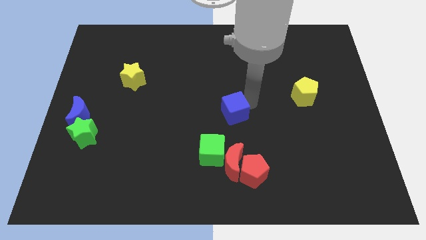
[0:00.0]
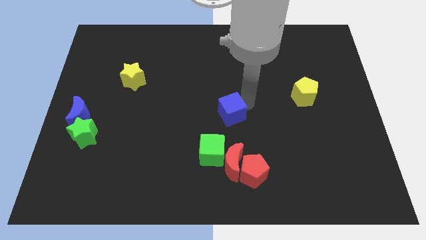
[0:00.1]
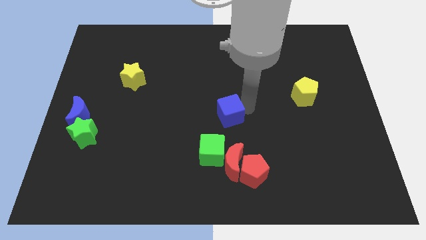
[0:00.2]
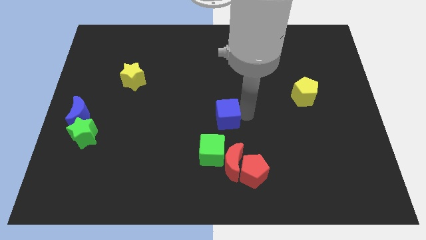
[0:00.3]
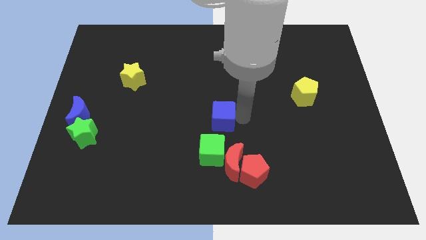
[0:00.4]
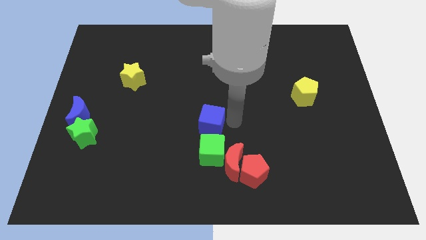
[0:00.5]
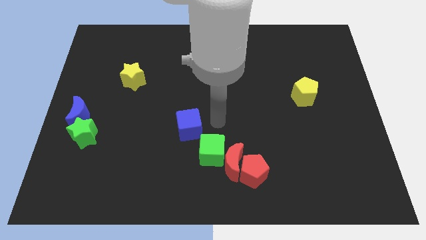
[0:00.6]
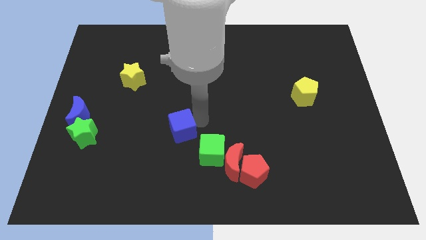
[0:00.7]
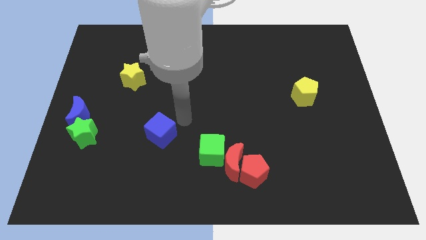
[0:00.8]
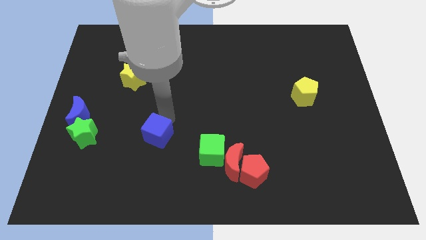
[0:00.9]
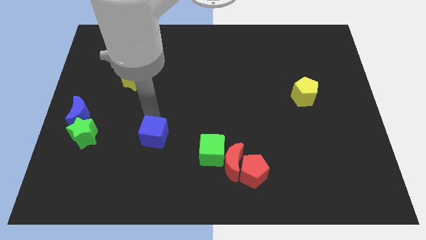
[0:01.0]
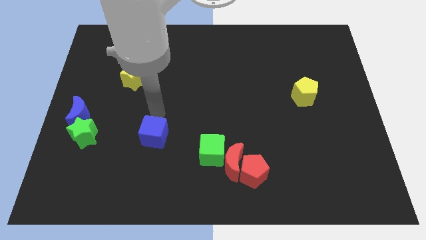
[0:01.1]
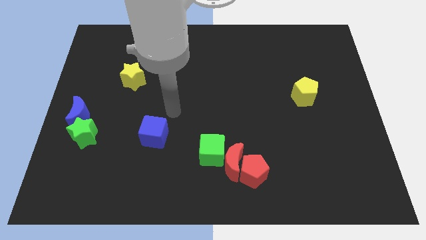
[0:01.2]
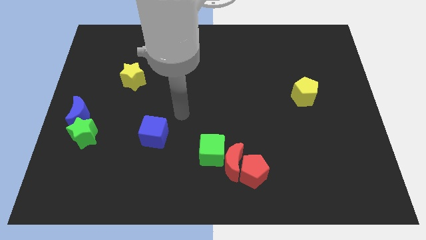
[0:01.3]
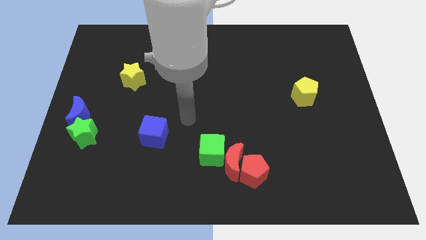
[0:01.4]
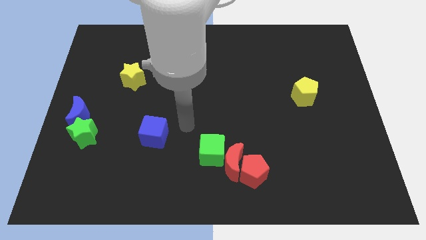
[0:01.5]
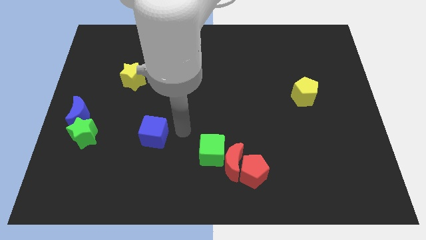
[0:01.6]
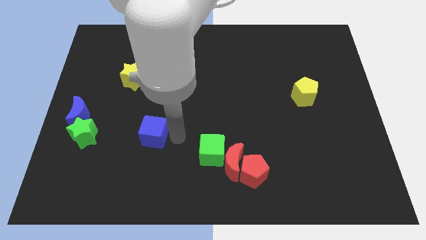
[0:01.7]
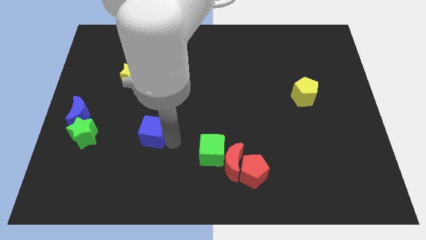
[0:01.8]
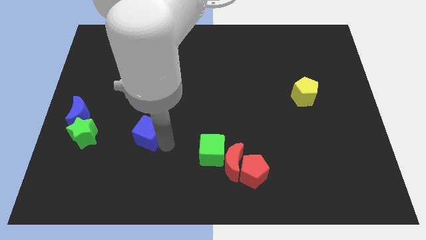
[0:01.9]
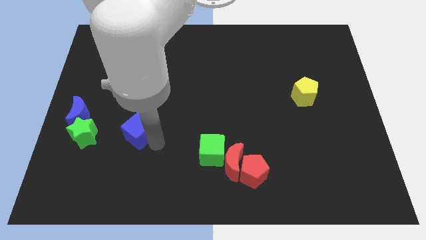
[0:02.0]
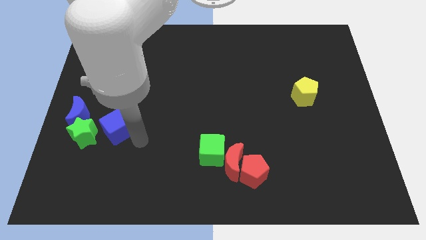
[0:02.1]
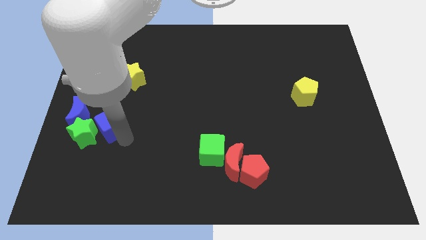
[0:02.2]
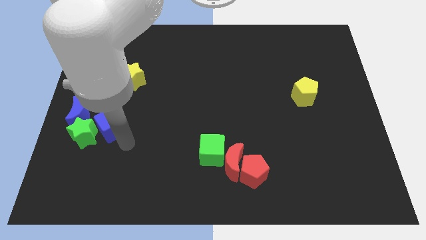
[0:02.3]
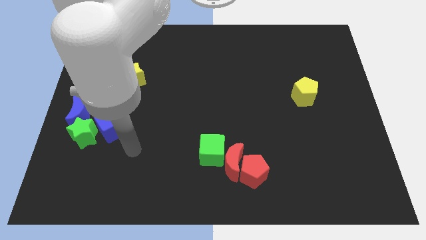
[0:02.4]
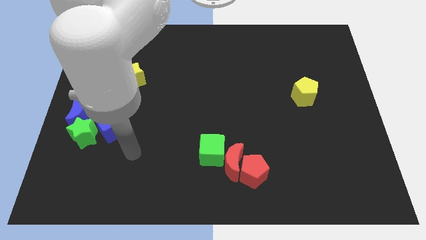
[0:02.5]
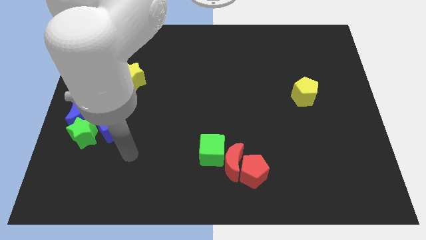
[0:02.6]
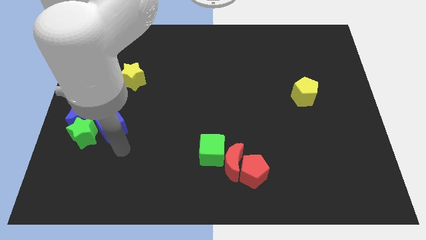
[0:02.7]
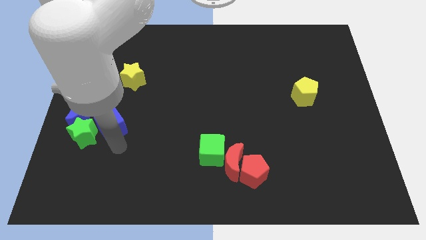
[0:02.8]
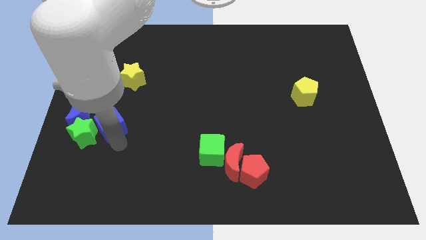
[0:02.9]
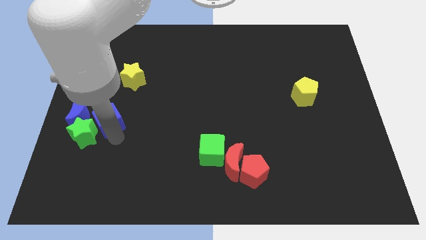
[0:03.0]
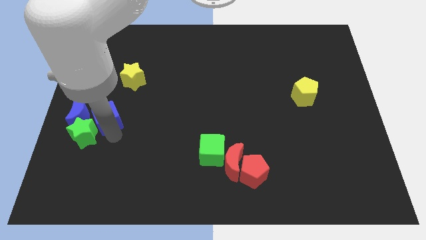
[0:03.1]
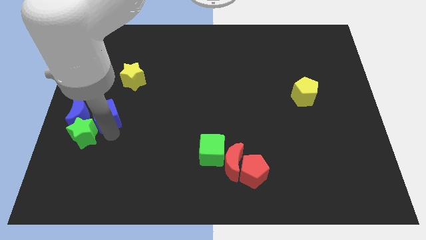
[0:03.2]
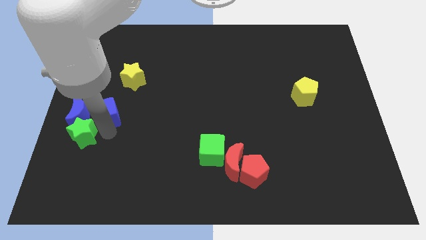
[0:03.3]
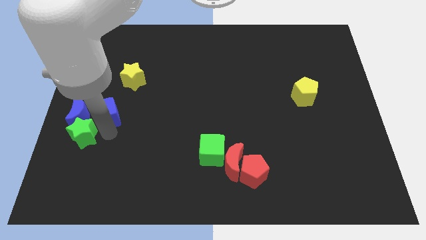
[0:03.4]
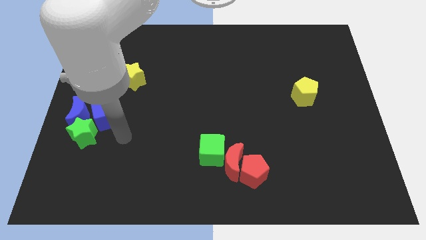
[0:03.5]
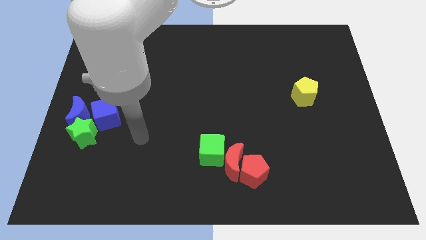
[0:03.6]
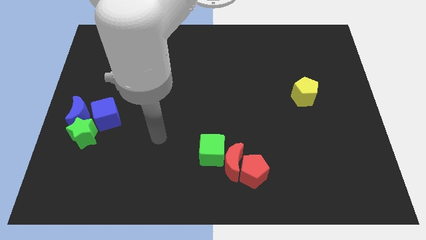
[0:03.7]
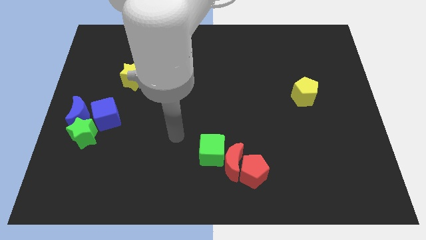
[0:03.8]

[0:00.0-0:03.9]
move the blue cube to the right of the blue moon

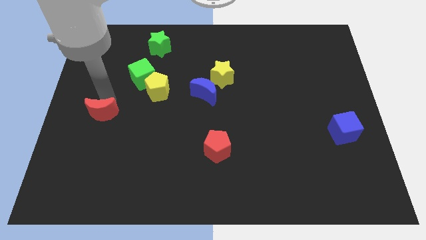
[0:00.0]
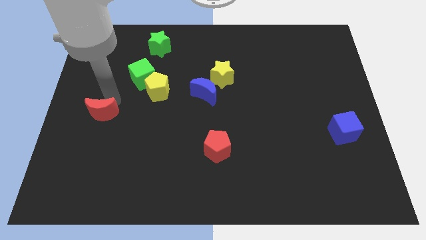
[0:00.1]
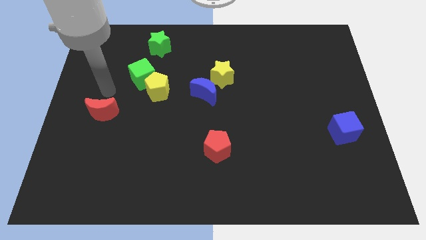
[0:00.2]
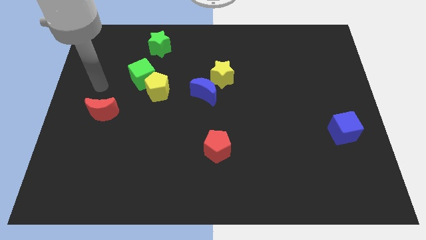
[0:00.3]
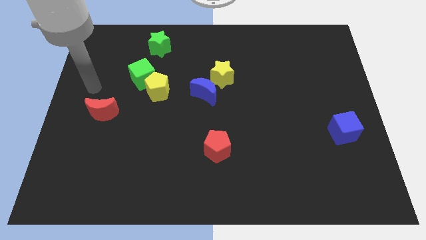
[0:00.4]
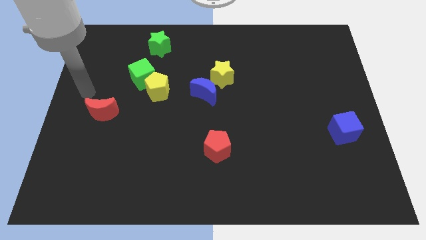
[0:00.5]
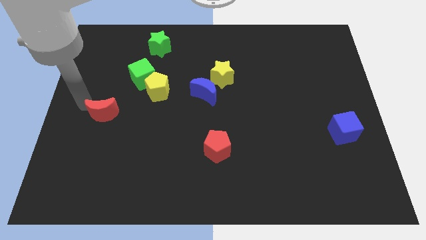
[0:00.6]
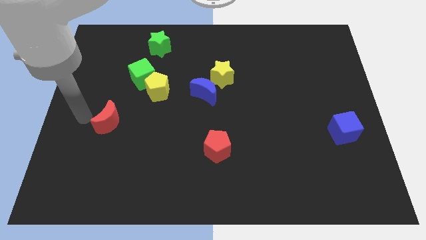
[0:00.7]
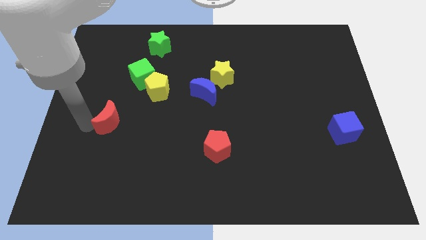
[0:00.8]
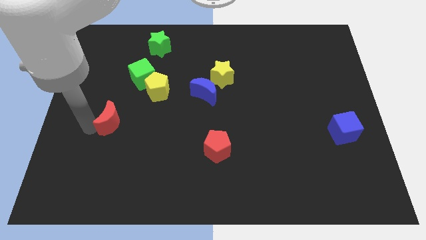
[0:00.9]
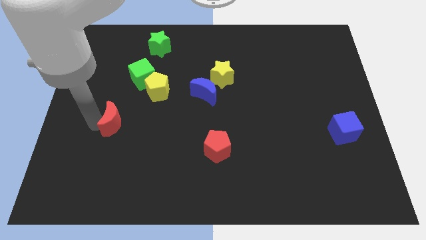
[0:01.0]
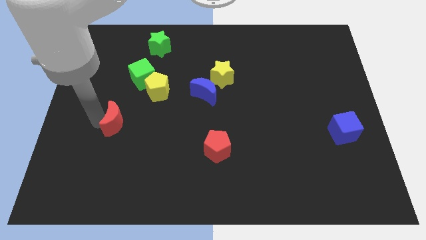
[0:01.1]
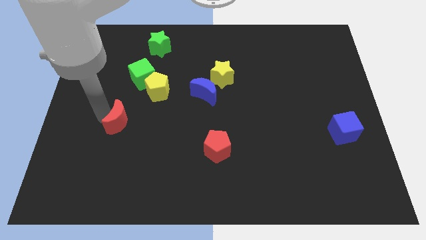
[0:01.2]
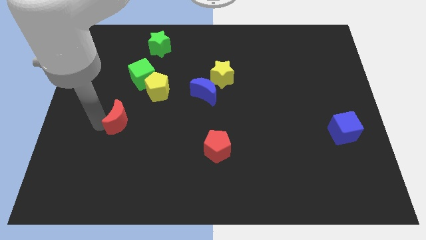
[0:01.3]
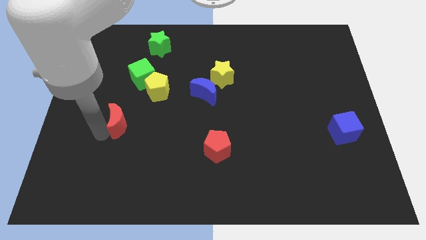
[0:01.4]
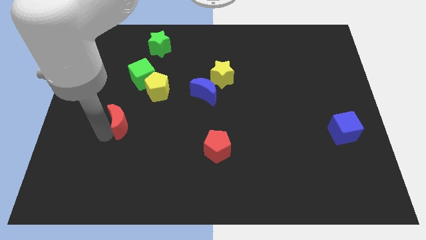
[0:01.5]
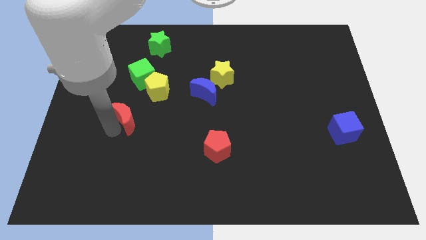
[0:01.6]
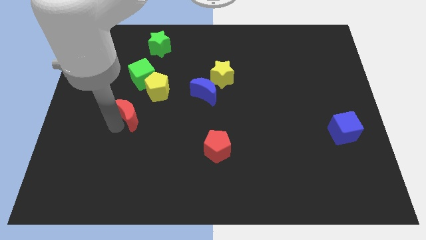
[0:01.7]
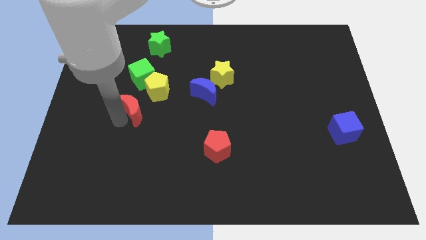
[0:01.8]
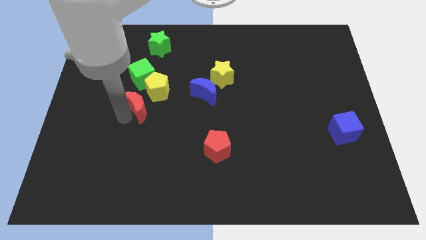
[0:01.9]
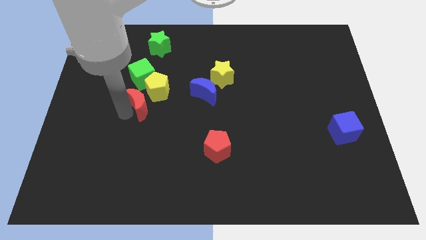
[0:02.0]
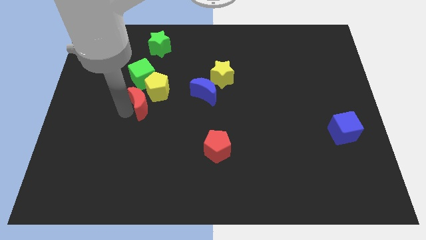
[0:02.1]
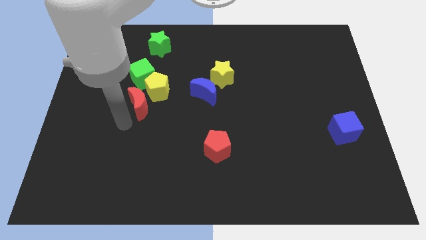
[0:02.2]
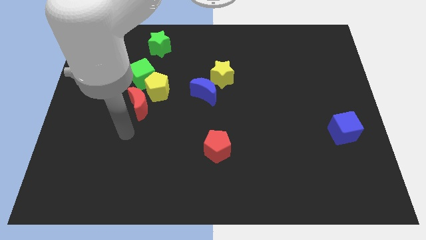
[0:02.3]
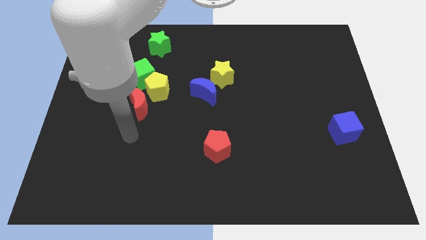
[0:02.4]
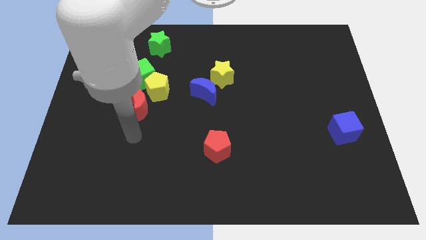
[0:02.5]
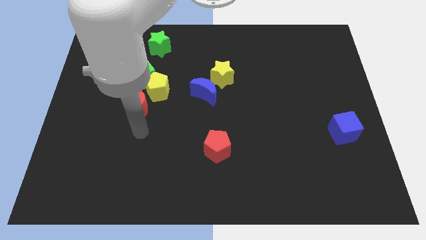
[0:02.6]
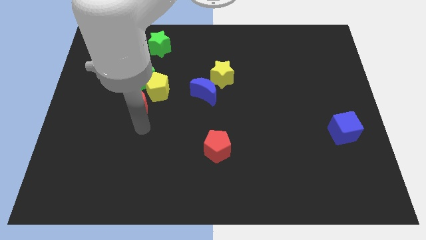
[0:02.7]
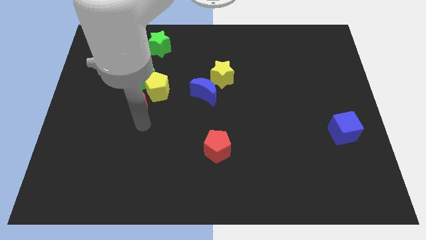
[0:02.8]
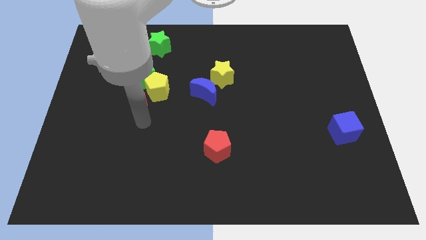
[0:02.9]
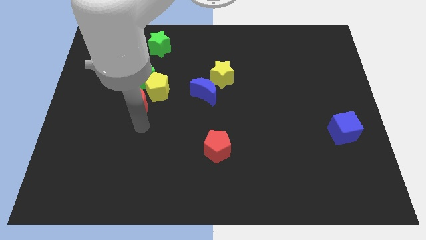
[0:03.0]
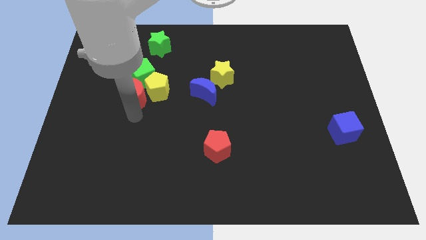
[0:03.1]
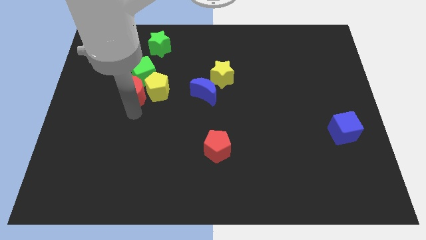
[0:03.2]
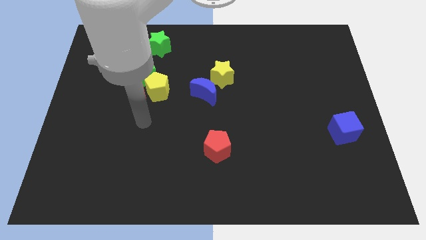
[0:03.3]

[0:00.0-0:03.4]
push the red moon into the green cube

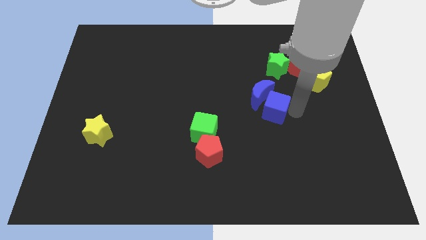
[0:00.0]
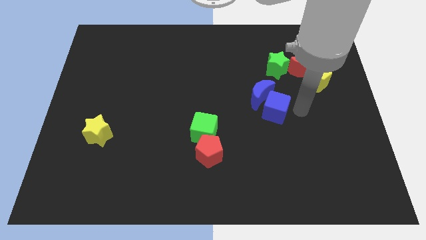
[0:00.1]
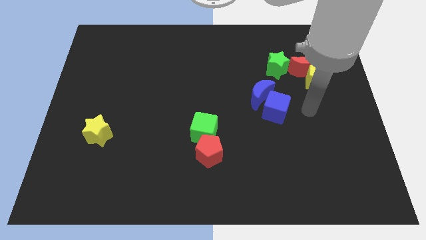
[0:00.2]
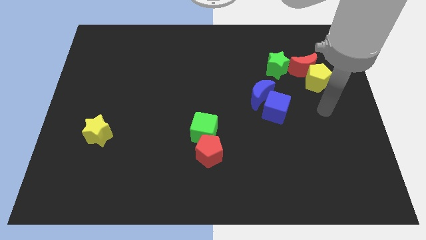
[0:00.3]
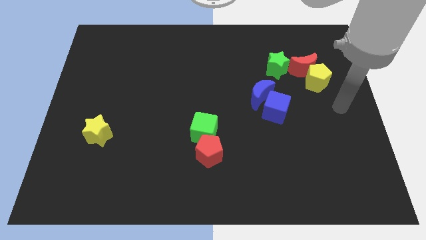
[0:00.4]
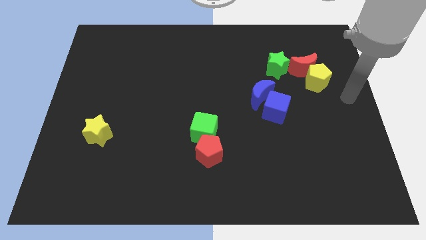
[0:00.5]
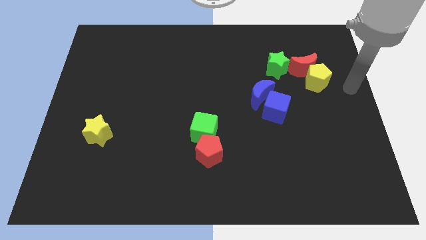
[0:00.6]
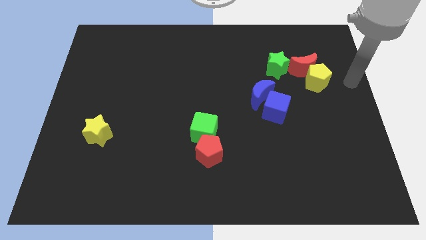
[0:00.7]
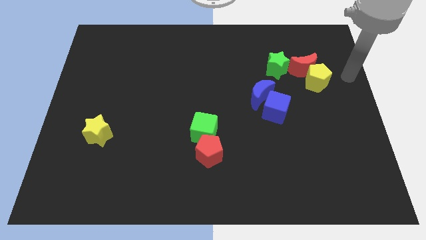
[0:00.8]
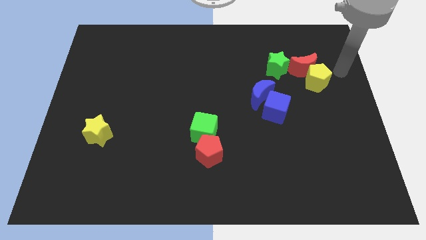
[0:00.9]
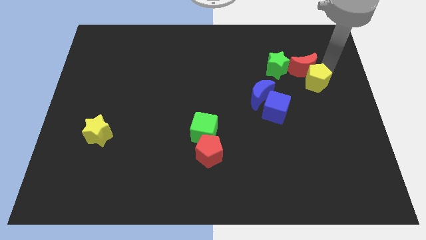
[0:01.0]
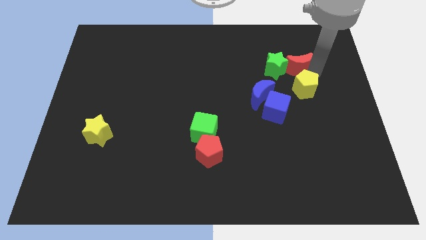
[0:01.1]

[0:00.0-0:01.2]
move your arm to the top of the yellow pentagon

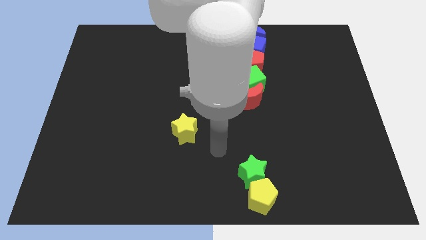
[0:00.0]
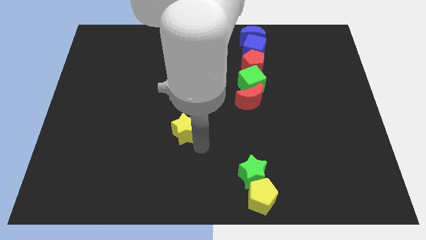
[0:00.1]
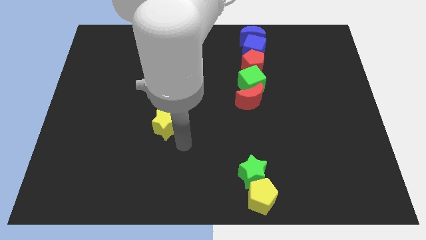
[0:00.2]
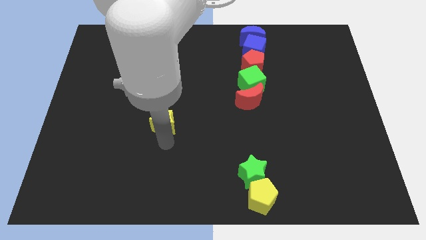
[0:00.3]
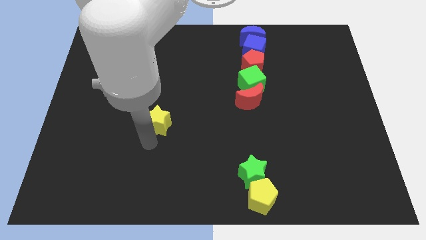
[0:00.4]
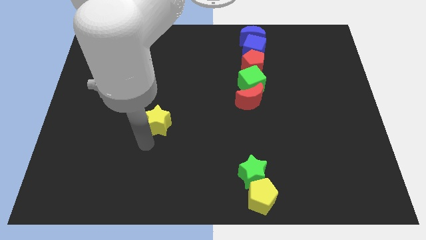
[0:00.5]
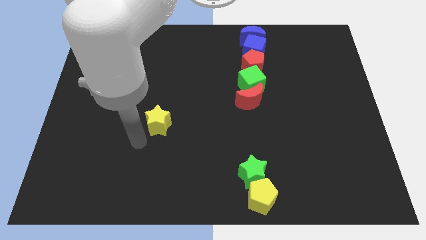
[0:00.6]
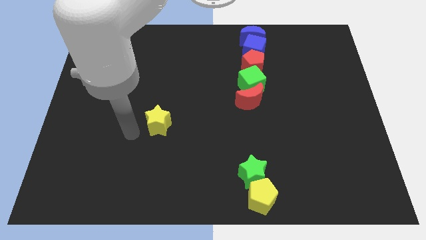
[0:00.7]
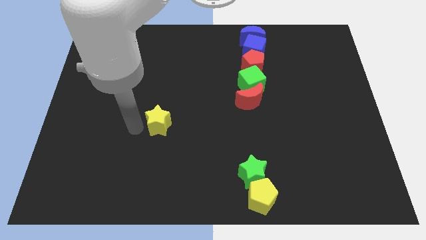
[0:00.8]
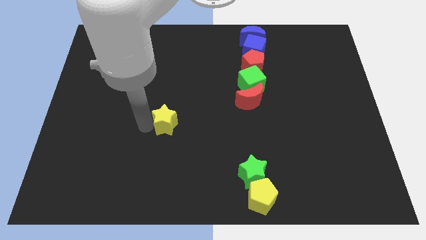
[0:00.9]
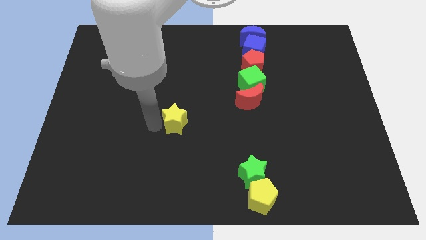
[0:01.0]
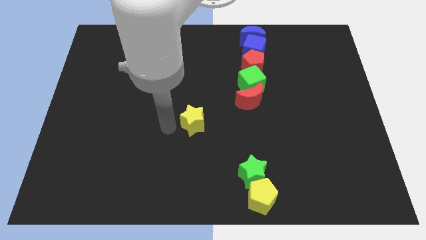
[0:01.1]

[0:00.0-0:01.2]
move the yellow star slightly upward
